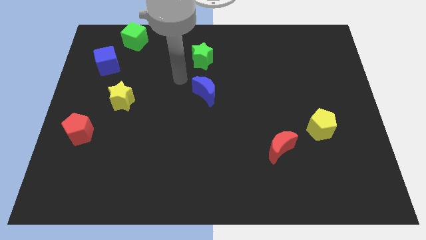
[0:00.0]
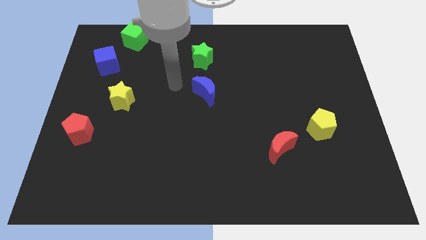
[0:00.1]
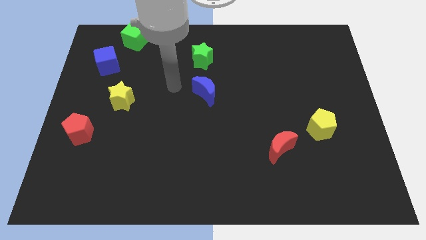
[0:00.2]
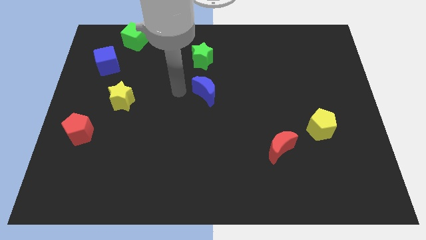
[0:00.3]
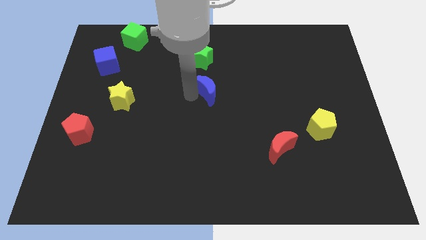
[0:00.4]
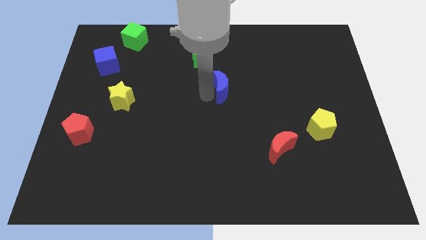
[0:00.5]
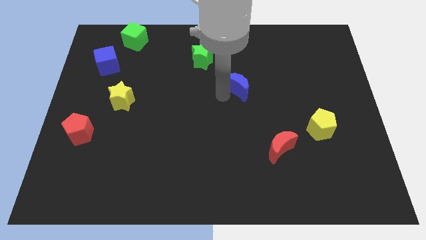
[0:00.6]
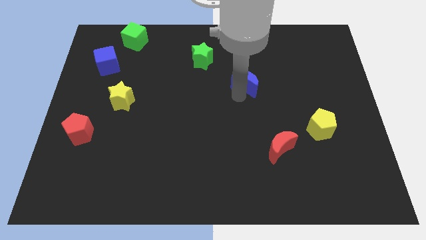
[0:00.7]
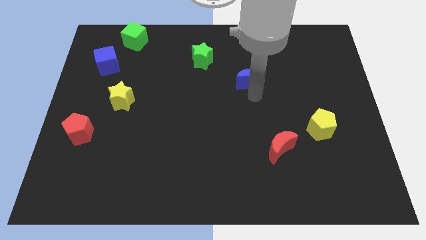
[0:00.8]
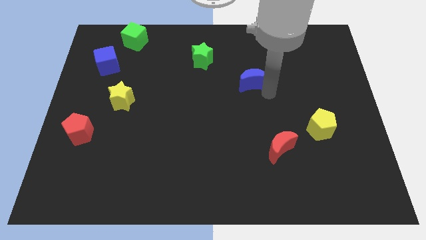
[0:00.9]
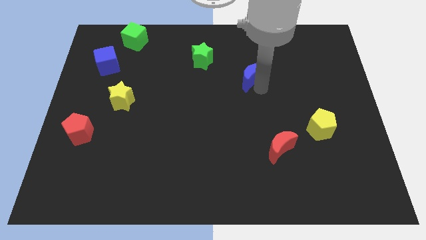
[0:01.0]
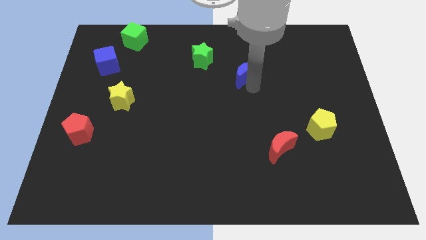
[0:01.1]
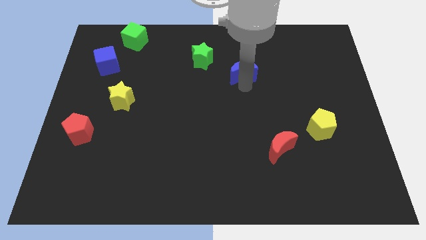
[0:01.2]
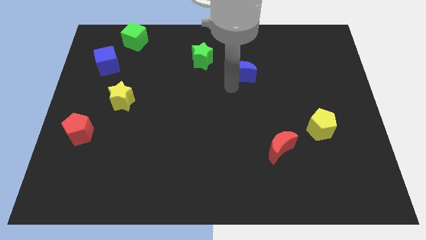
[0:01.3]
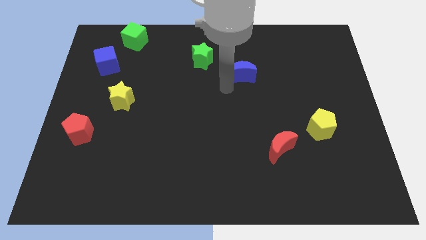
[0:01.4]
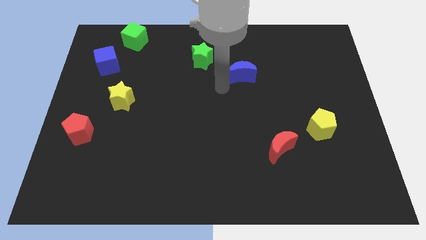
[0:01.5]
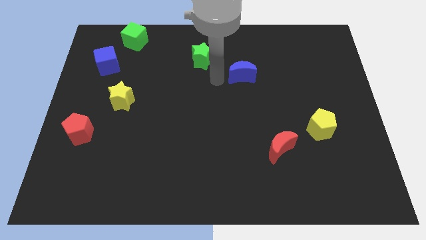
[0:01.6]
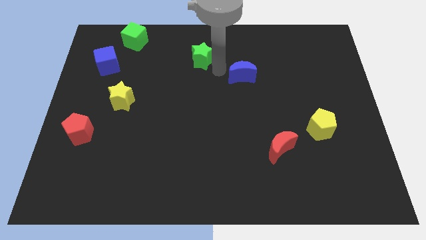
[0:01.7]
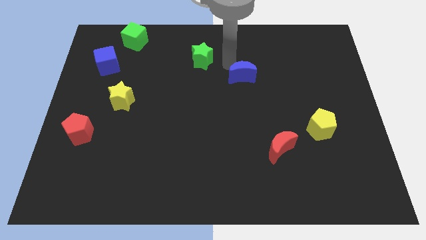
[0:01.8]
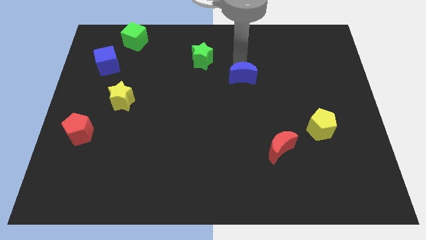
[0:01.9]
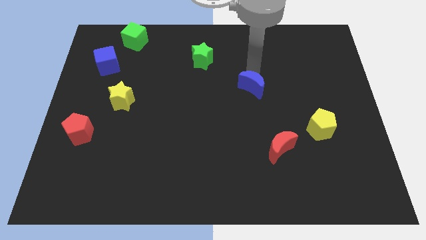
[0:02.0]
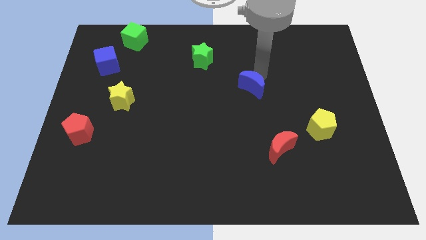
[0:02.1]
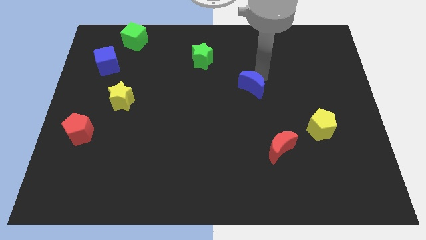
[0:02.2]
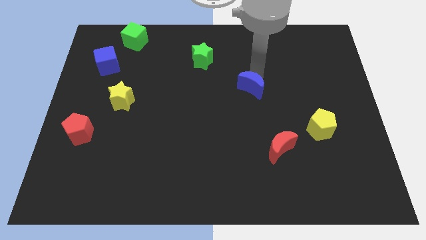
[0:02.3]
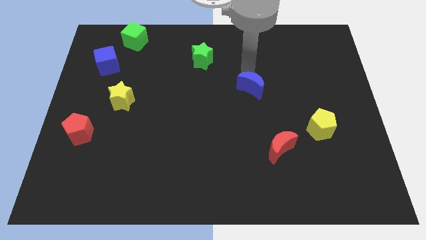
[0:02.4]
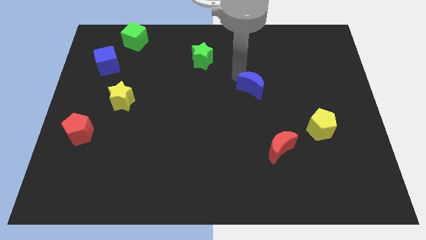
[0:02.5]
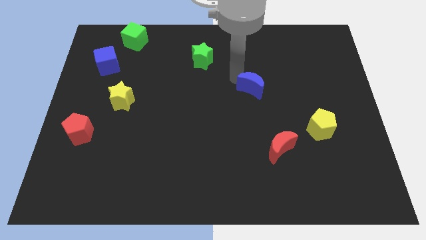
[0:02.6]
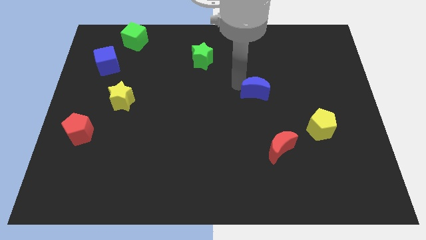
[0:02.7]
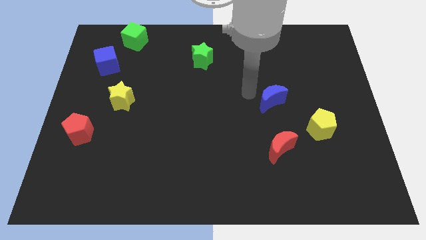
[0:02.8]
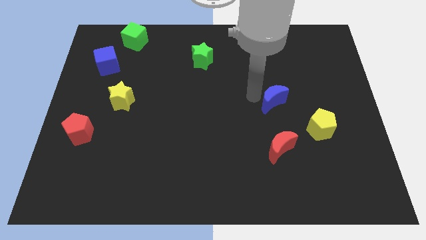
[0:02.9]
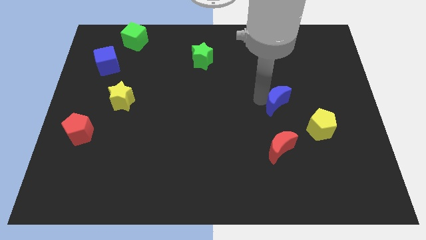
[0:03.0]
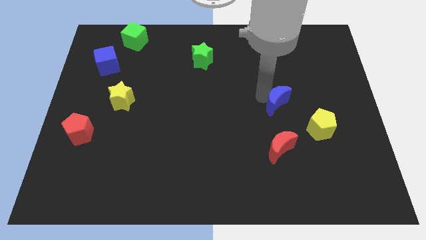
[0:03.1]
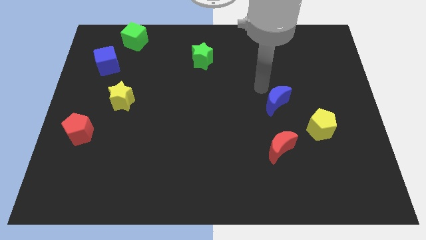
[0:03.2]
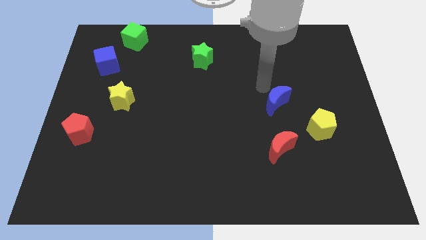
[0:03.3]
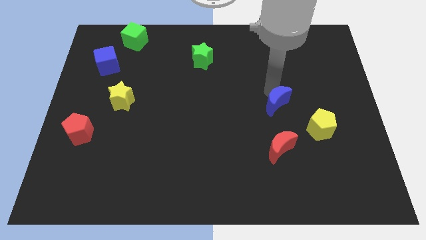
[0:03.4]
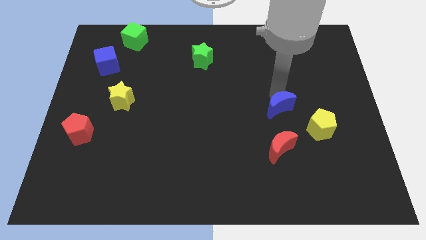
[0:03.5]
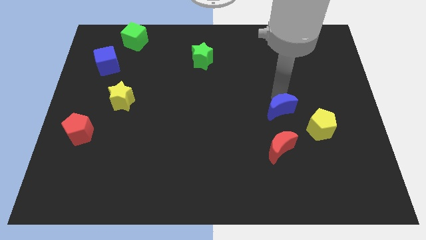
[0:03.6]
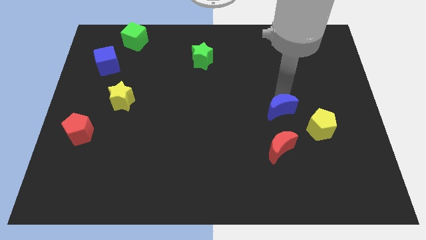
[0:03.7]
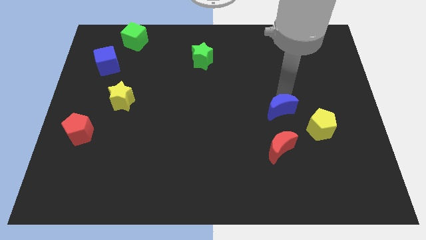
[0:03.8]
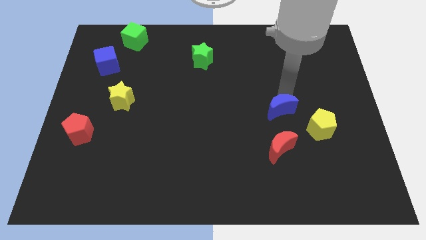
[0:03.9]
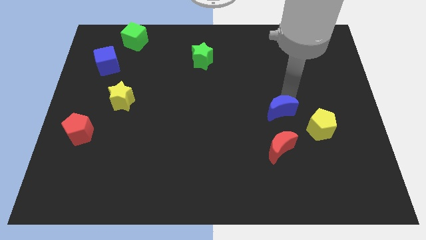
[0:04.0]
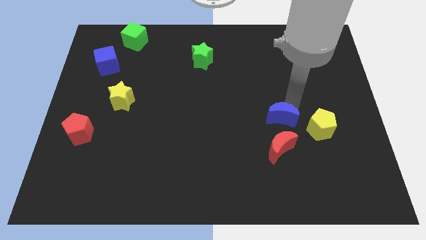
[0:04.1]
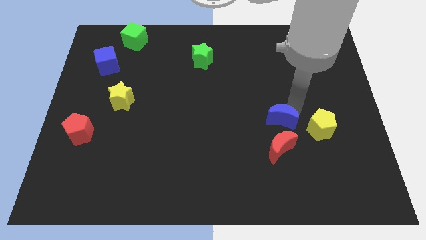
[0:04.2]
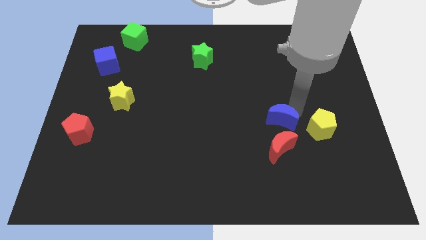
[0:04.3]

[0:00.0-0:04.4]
place the blue crescent above the red crescent

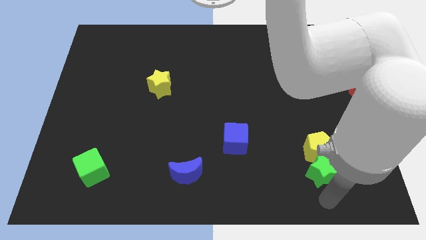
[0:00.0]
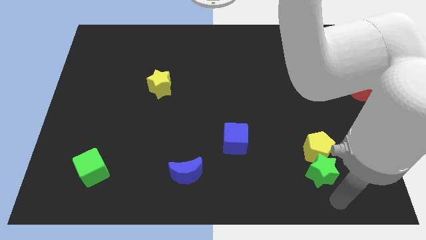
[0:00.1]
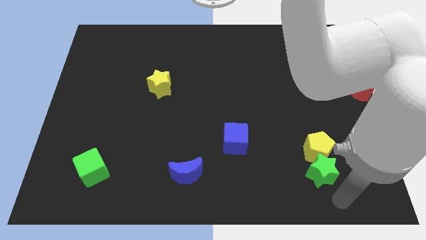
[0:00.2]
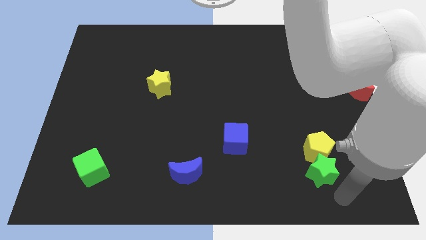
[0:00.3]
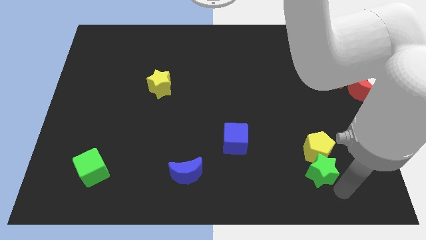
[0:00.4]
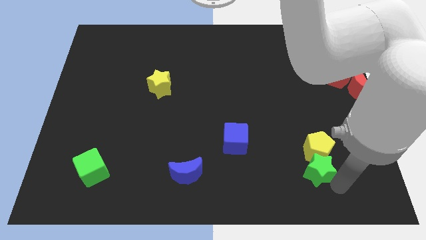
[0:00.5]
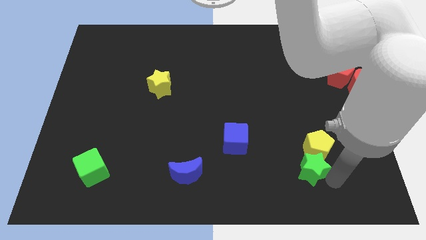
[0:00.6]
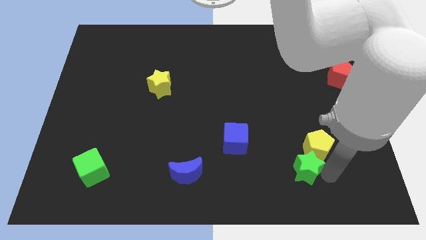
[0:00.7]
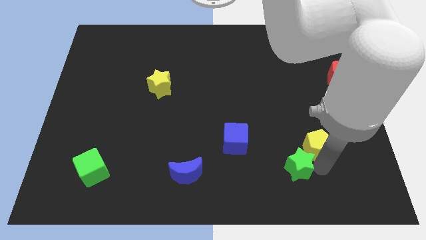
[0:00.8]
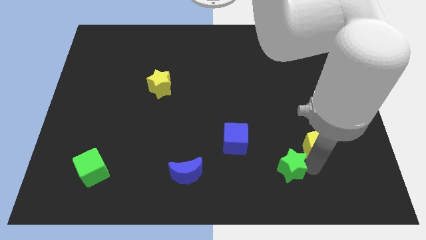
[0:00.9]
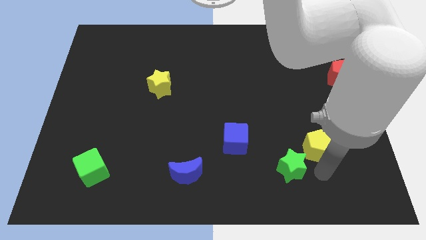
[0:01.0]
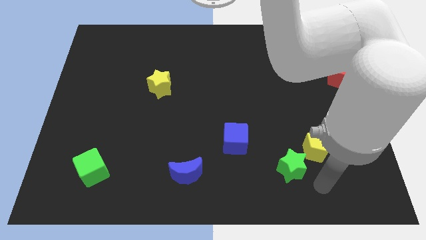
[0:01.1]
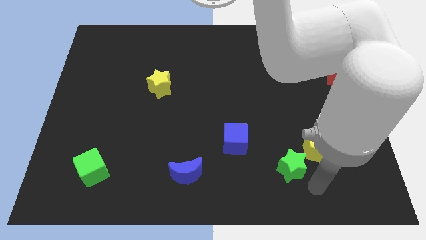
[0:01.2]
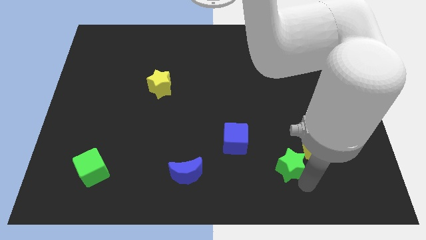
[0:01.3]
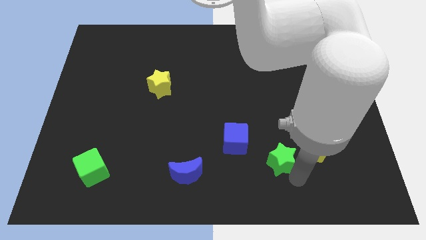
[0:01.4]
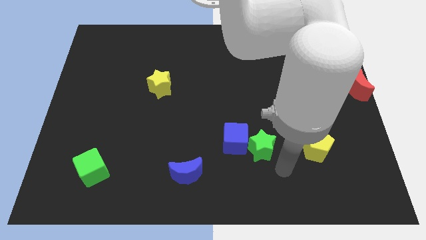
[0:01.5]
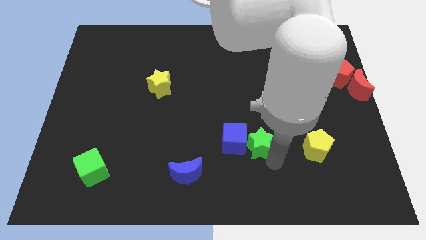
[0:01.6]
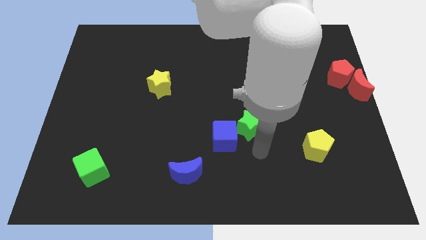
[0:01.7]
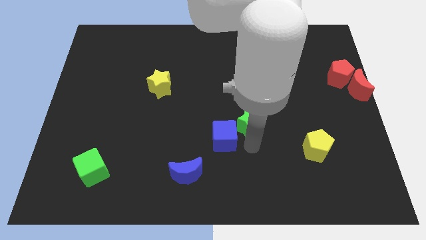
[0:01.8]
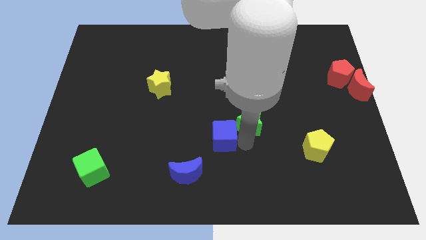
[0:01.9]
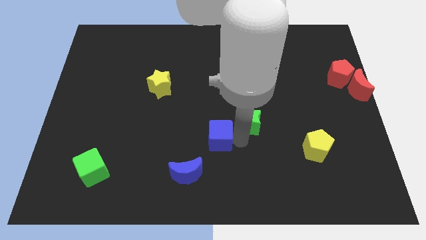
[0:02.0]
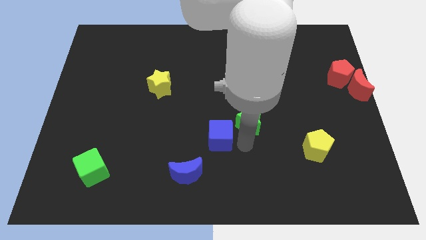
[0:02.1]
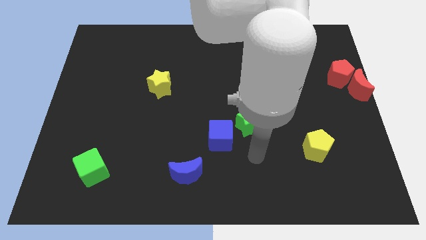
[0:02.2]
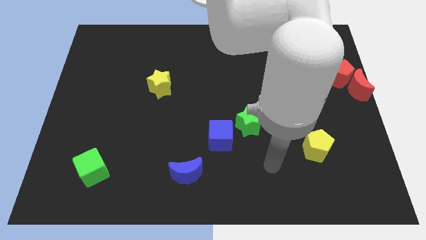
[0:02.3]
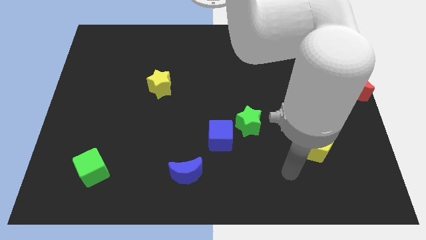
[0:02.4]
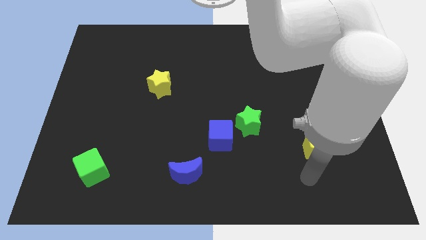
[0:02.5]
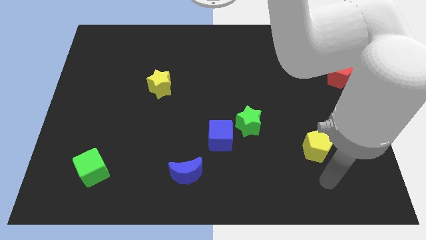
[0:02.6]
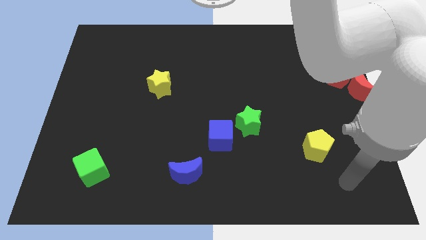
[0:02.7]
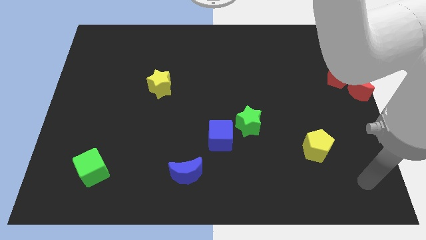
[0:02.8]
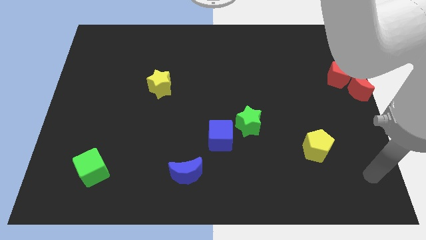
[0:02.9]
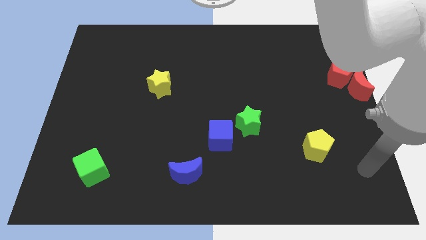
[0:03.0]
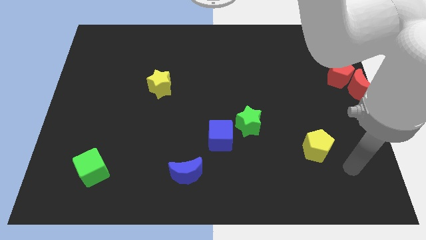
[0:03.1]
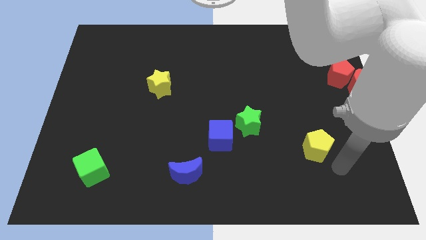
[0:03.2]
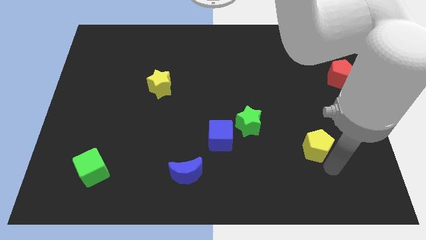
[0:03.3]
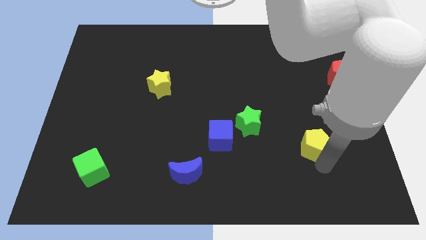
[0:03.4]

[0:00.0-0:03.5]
move green star right beside the blue cube

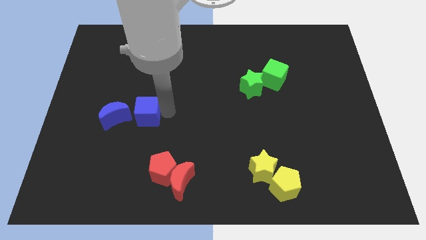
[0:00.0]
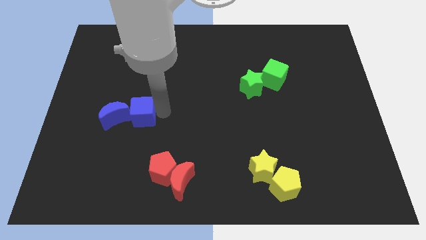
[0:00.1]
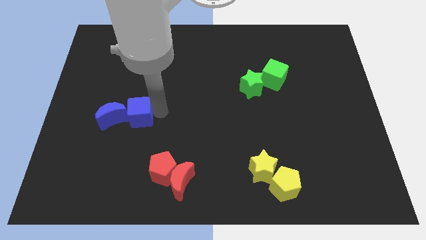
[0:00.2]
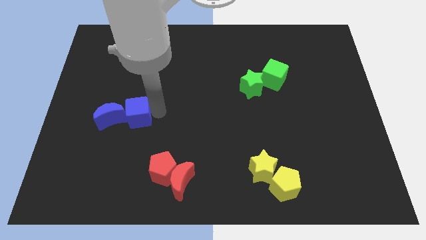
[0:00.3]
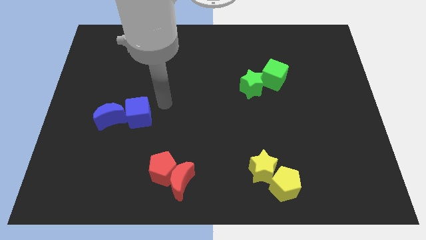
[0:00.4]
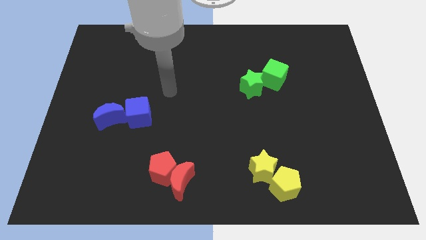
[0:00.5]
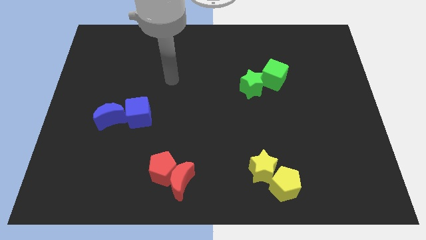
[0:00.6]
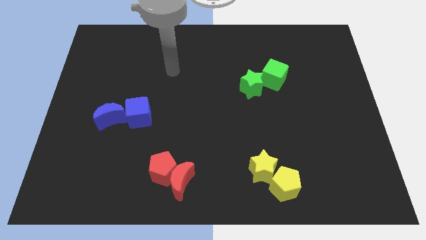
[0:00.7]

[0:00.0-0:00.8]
slide the blue blocks towards left

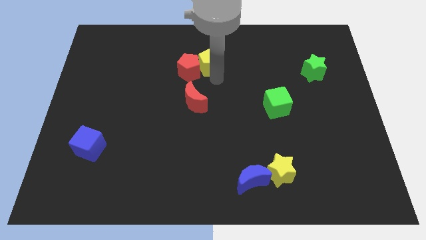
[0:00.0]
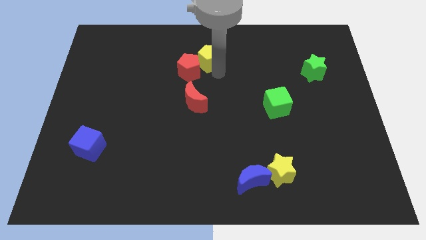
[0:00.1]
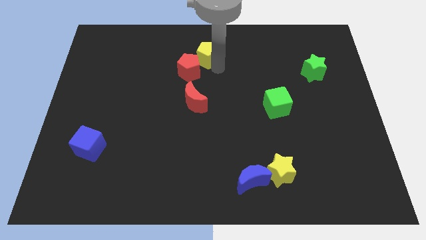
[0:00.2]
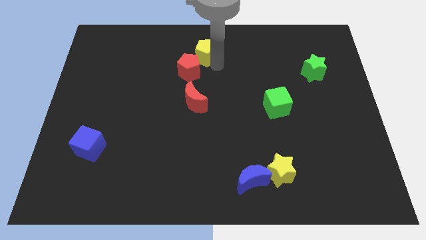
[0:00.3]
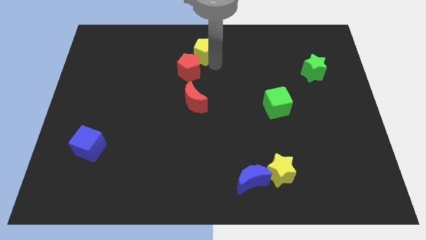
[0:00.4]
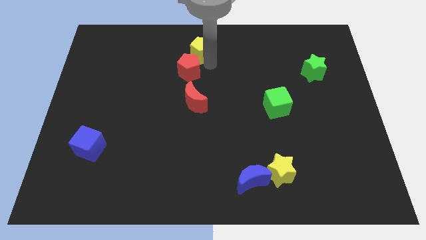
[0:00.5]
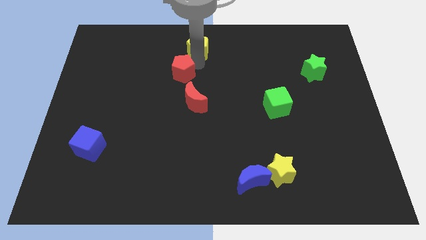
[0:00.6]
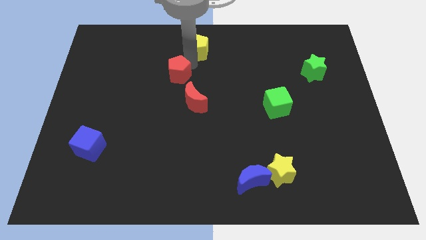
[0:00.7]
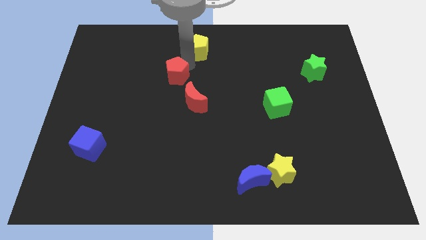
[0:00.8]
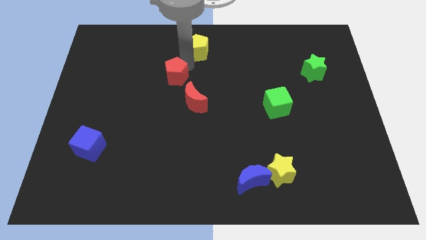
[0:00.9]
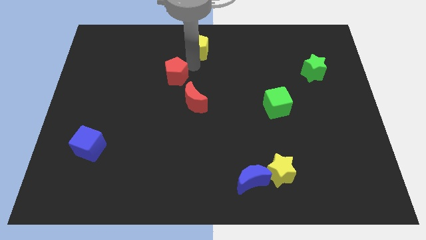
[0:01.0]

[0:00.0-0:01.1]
place your arm in between the red and yellow pentagon
